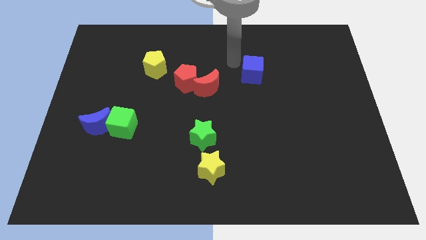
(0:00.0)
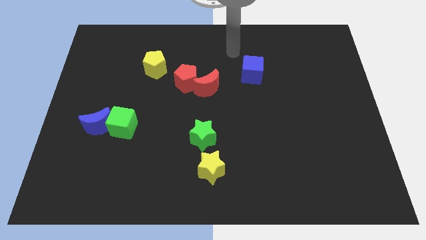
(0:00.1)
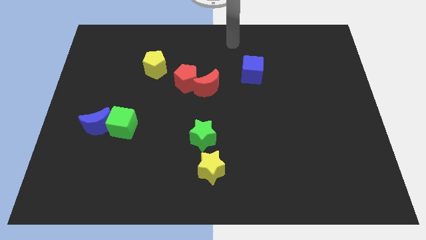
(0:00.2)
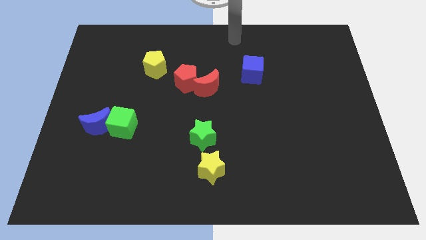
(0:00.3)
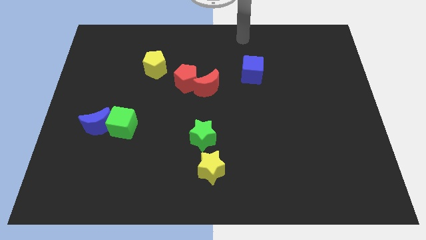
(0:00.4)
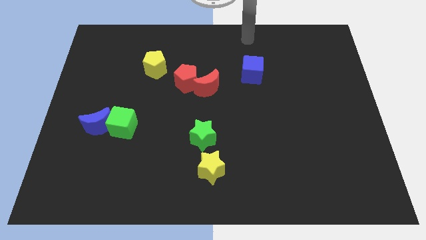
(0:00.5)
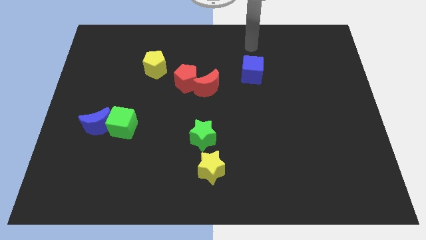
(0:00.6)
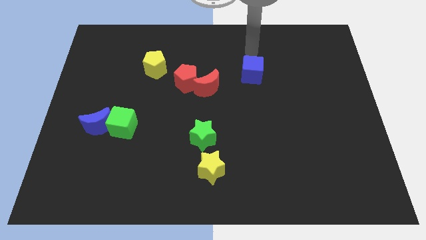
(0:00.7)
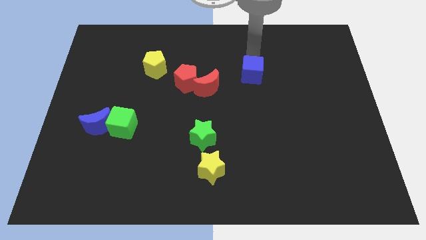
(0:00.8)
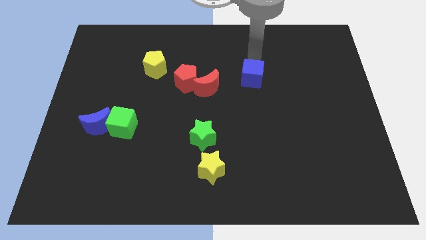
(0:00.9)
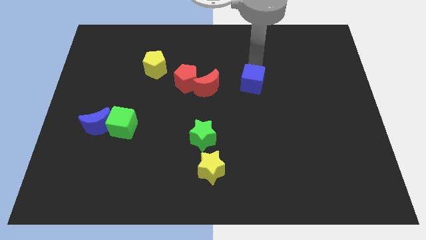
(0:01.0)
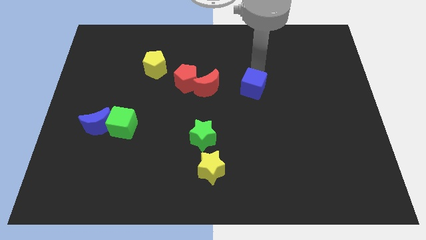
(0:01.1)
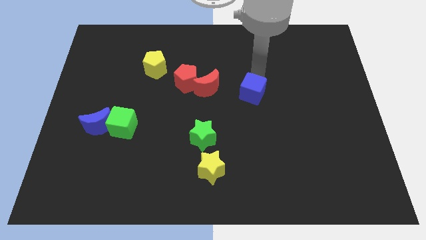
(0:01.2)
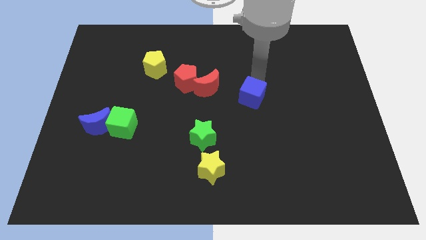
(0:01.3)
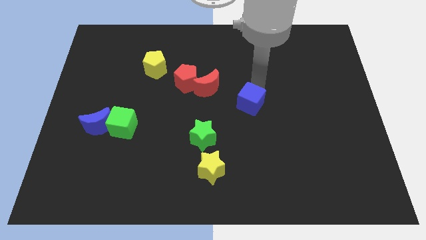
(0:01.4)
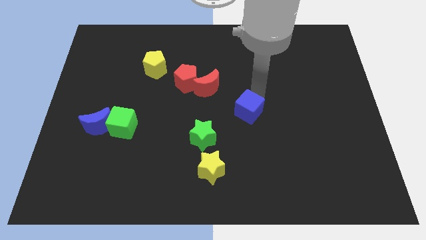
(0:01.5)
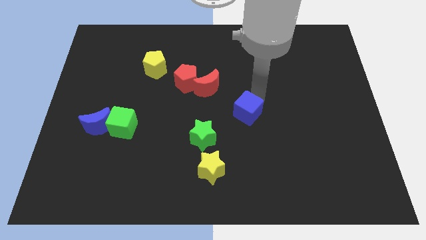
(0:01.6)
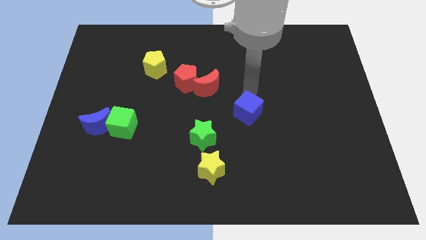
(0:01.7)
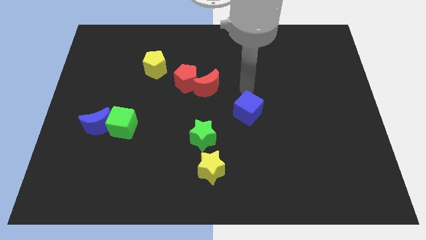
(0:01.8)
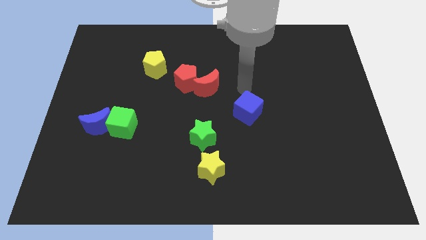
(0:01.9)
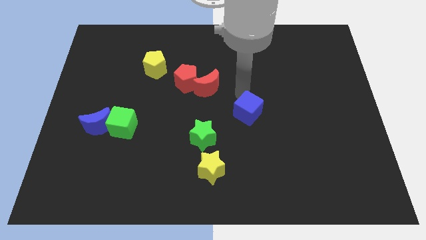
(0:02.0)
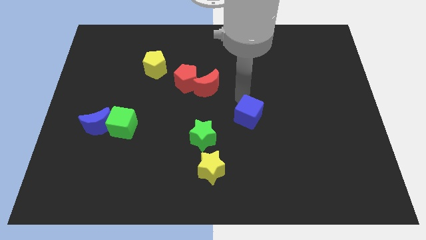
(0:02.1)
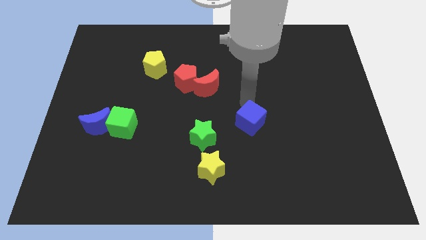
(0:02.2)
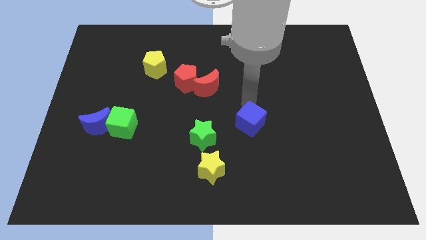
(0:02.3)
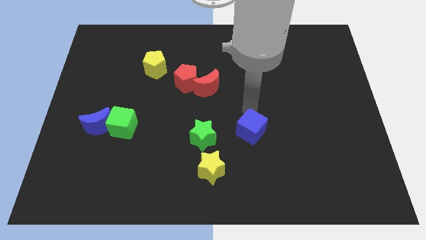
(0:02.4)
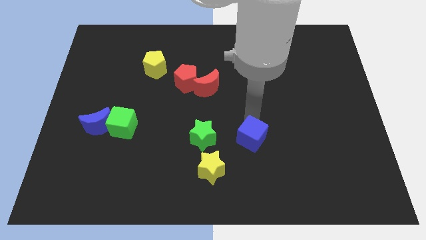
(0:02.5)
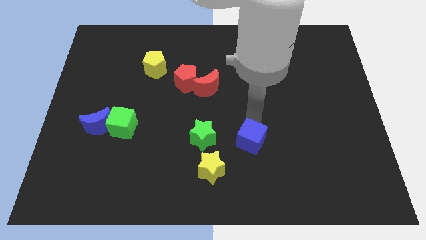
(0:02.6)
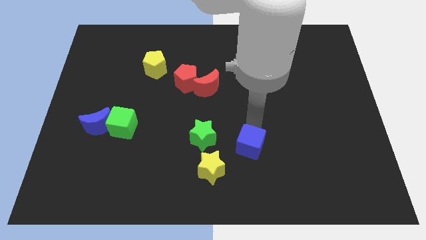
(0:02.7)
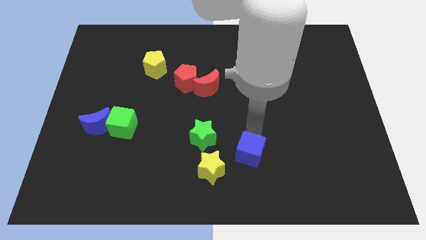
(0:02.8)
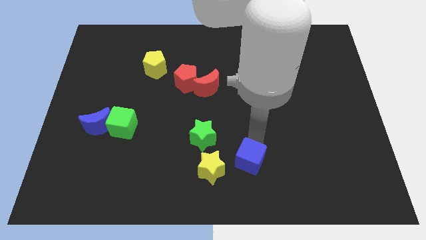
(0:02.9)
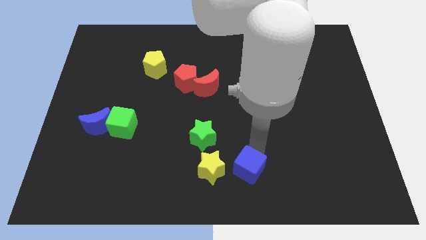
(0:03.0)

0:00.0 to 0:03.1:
move blue cube downwards

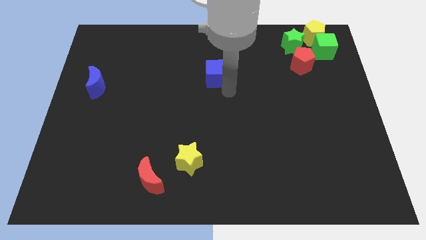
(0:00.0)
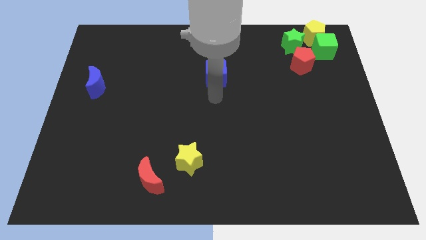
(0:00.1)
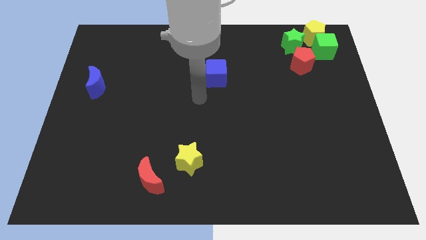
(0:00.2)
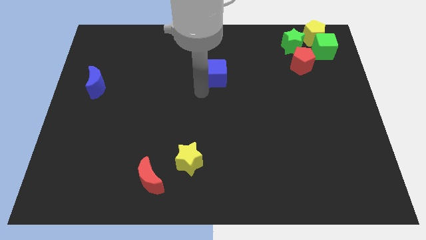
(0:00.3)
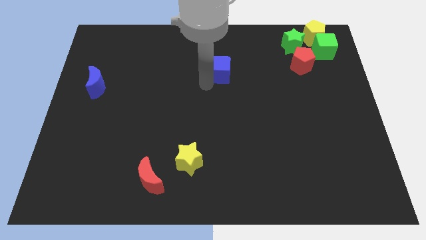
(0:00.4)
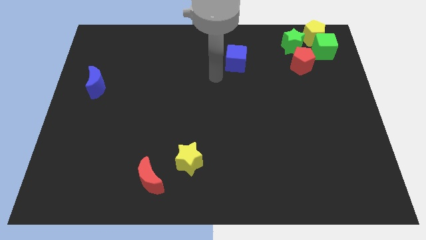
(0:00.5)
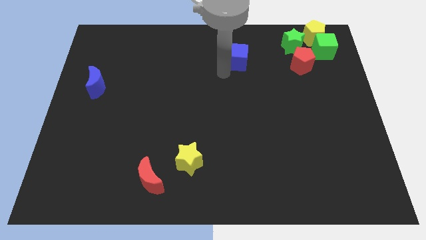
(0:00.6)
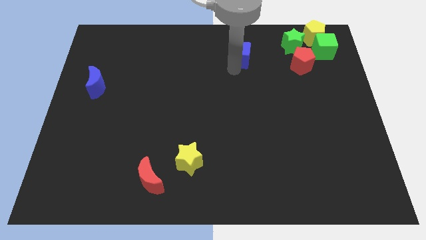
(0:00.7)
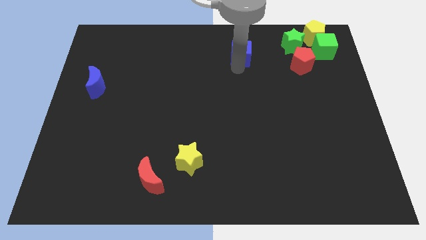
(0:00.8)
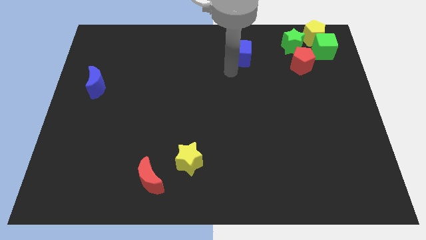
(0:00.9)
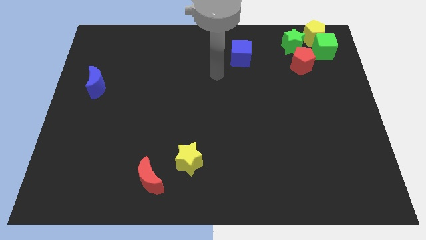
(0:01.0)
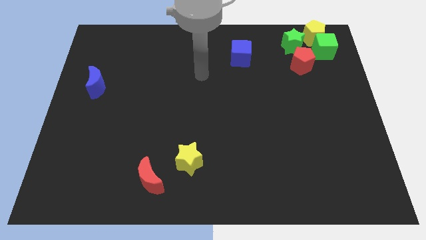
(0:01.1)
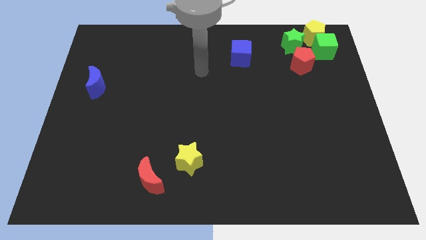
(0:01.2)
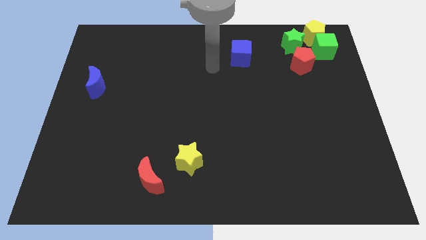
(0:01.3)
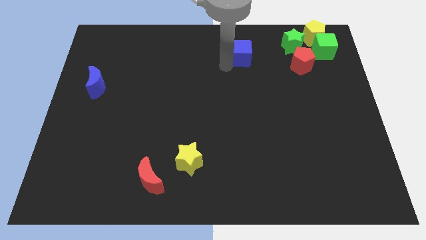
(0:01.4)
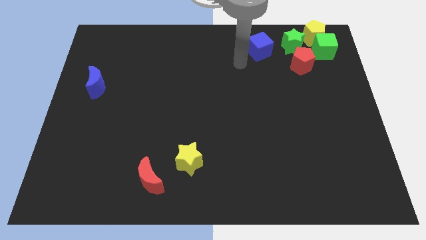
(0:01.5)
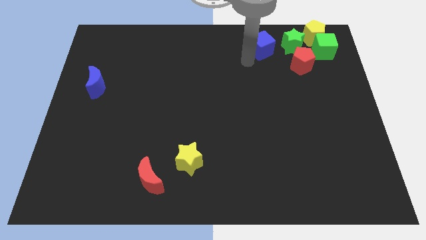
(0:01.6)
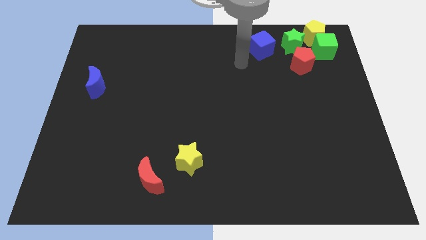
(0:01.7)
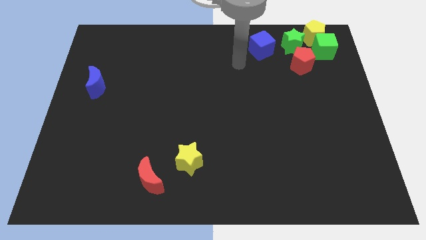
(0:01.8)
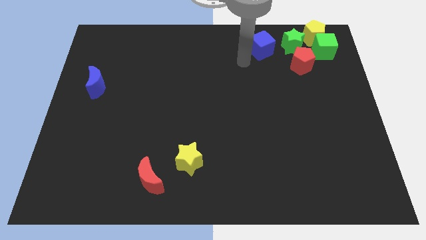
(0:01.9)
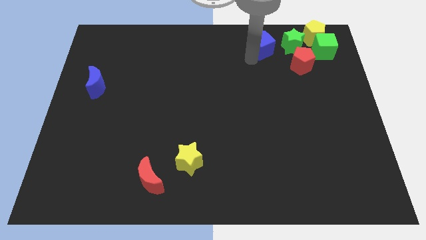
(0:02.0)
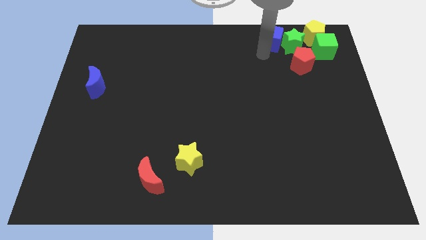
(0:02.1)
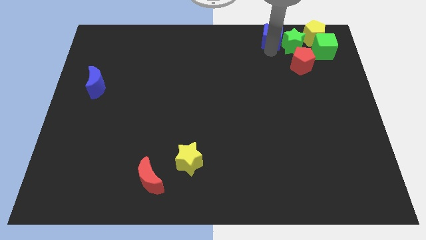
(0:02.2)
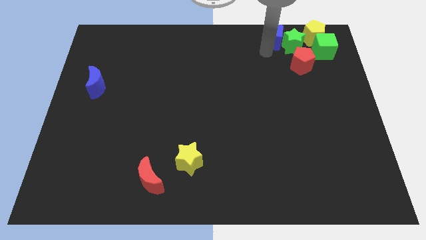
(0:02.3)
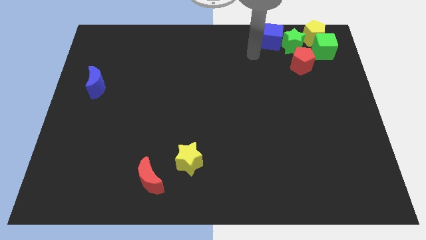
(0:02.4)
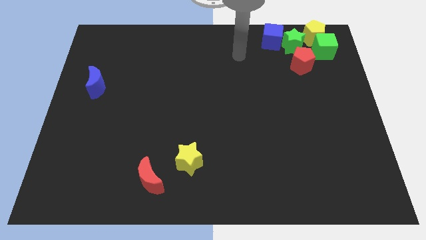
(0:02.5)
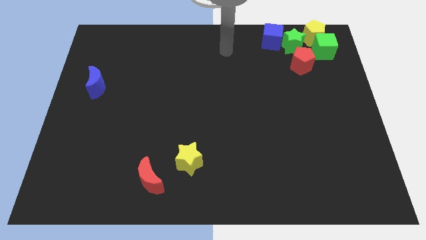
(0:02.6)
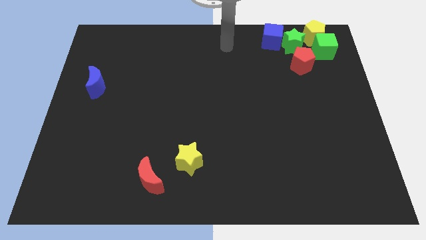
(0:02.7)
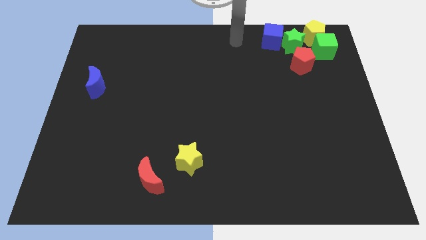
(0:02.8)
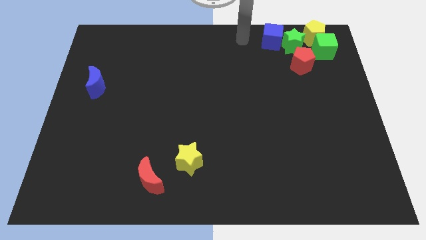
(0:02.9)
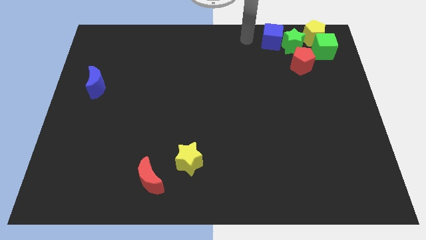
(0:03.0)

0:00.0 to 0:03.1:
put the blue cube to the left side of the green star

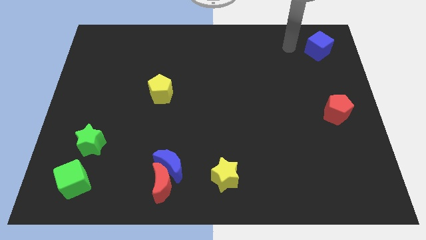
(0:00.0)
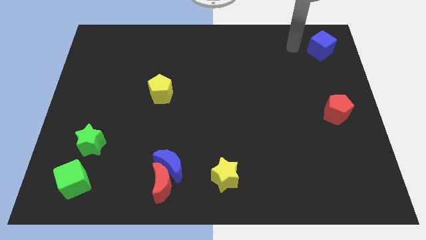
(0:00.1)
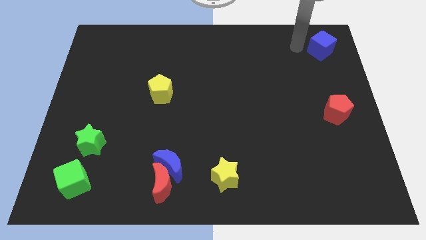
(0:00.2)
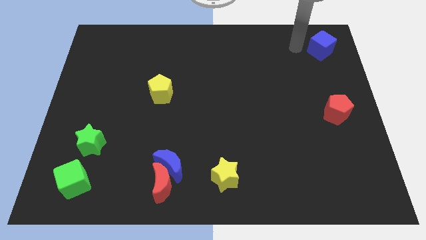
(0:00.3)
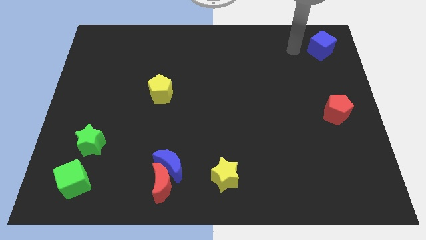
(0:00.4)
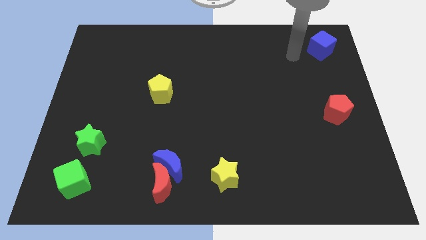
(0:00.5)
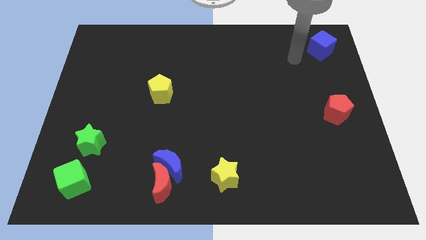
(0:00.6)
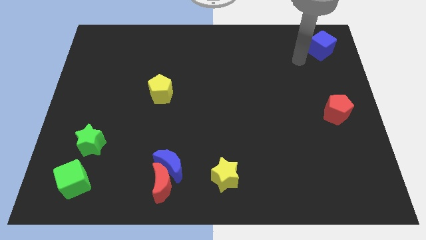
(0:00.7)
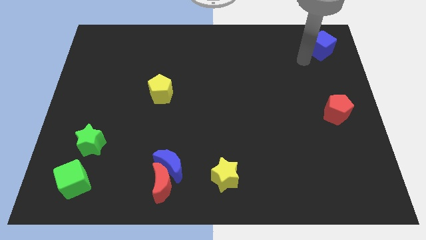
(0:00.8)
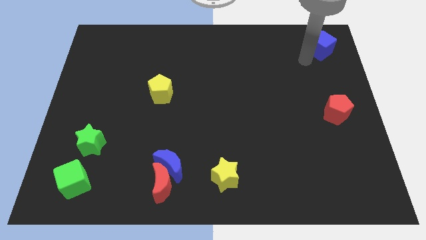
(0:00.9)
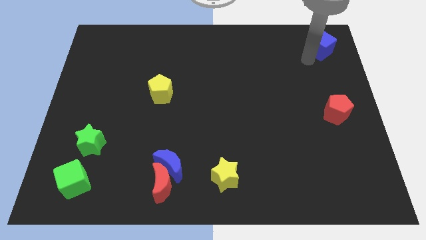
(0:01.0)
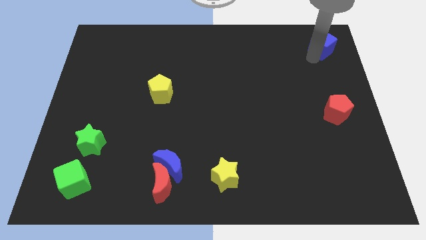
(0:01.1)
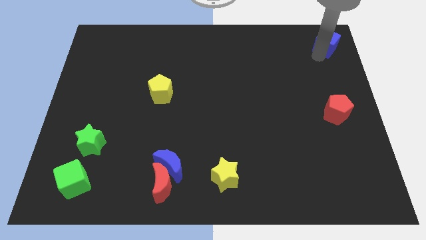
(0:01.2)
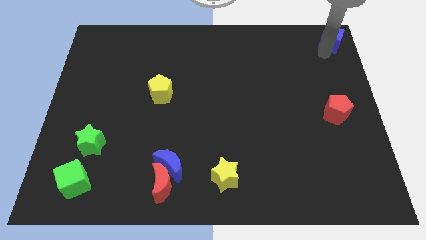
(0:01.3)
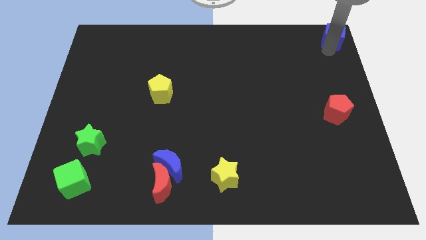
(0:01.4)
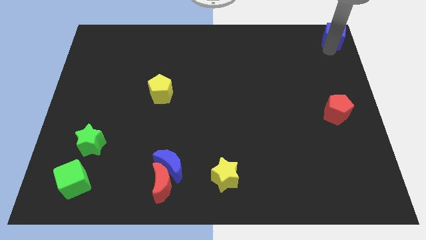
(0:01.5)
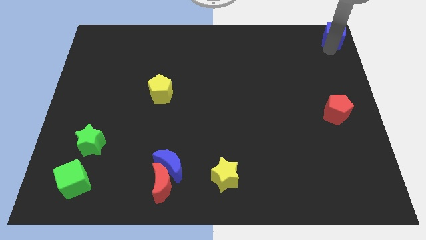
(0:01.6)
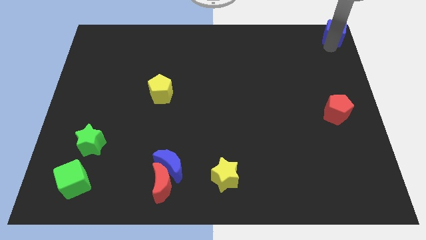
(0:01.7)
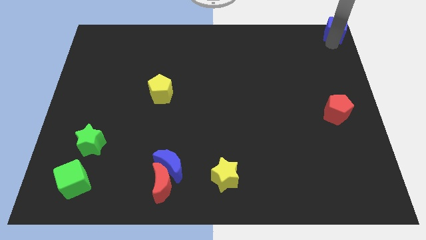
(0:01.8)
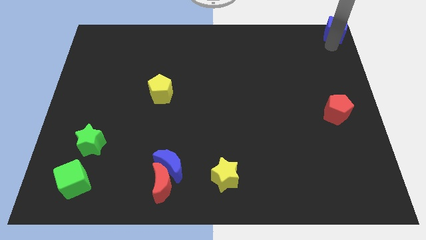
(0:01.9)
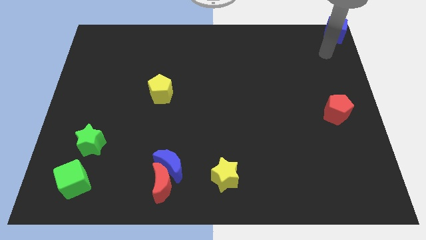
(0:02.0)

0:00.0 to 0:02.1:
push blue cube to the top right corner

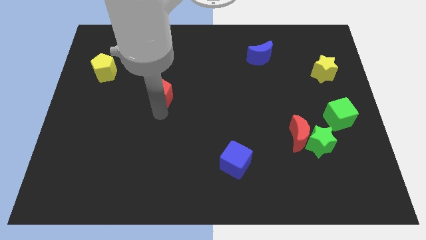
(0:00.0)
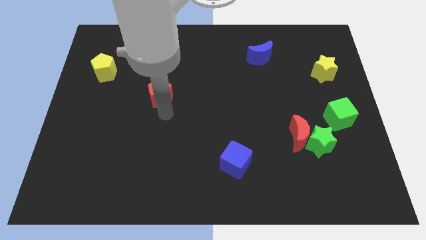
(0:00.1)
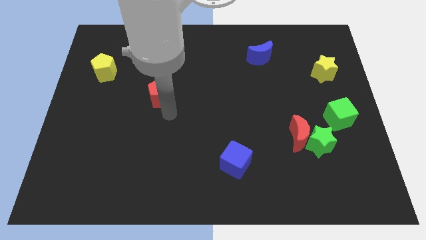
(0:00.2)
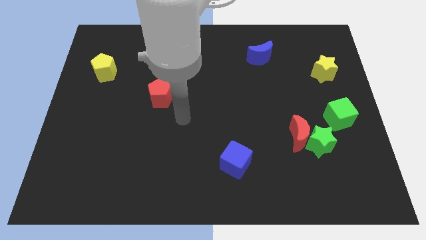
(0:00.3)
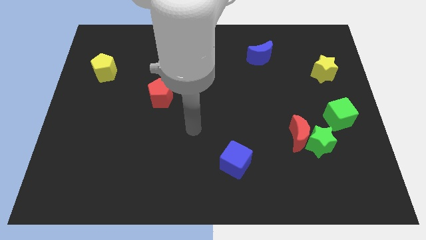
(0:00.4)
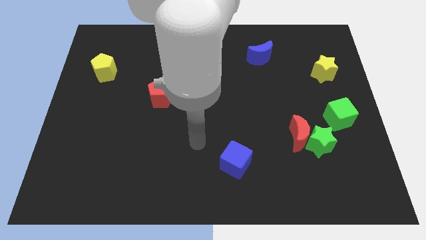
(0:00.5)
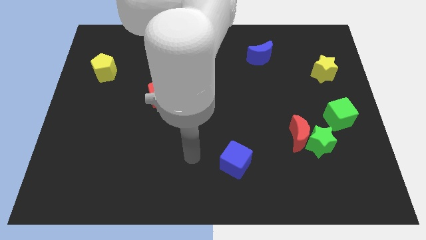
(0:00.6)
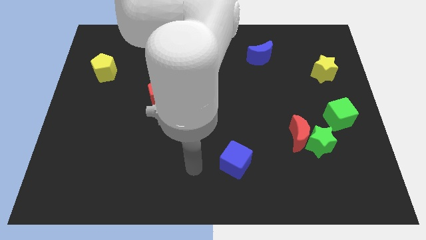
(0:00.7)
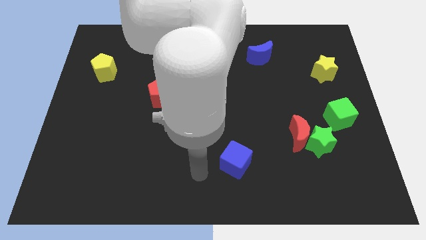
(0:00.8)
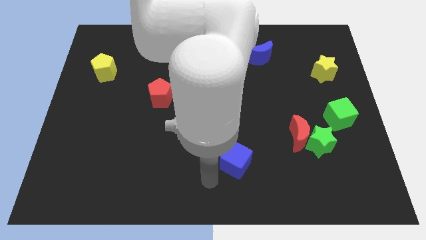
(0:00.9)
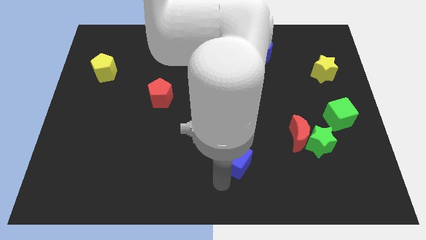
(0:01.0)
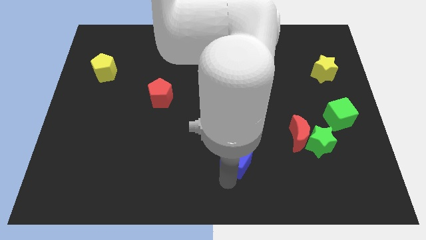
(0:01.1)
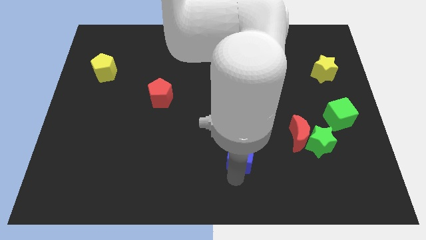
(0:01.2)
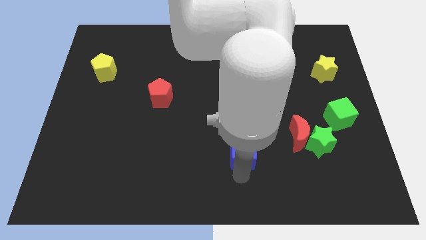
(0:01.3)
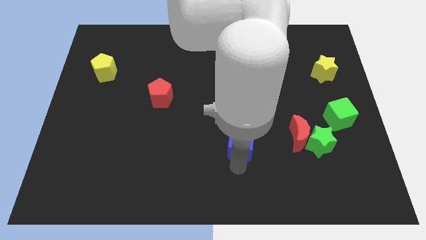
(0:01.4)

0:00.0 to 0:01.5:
tap the bottom side of the blue cube
